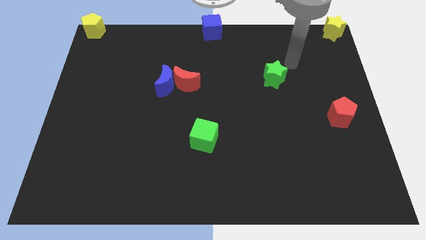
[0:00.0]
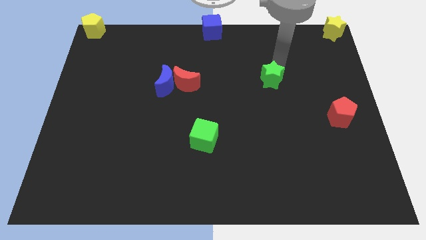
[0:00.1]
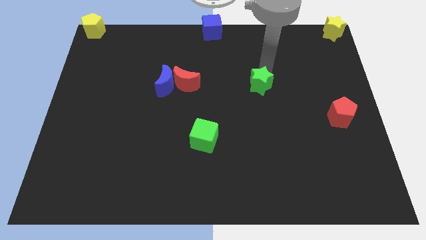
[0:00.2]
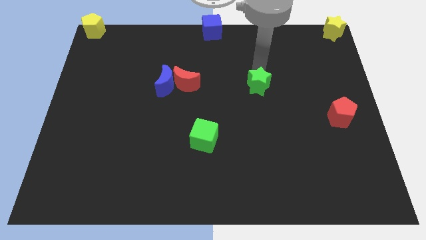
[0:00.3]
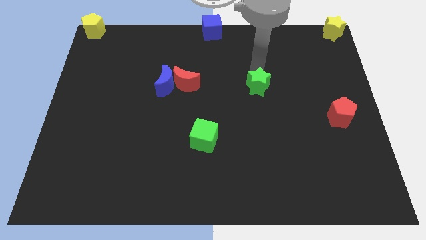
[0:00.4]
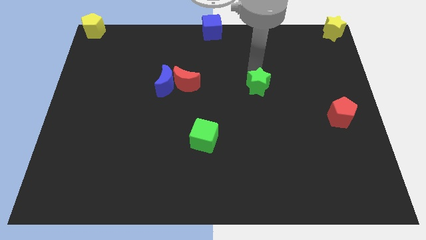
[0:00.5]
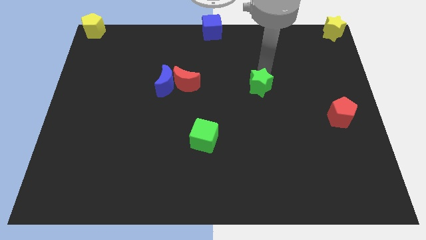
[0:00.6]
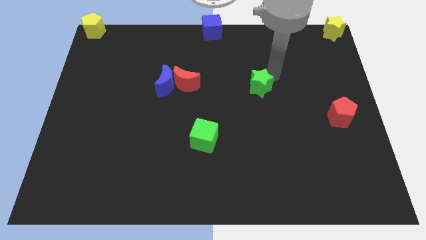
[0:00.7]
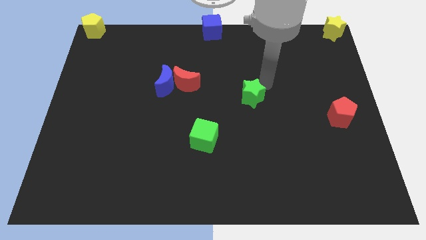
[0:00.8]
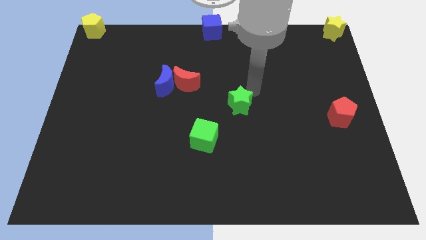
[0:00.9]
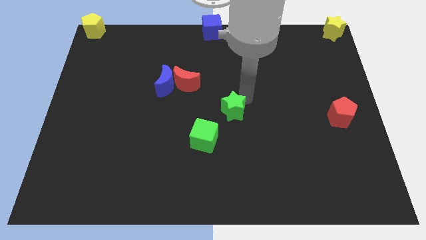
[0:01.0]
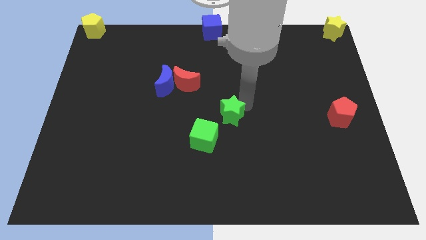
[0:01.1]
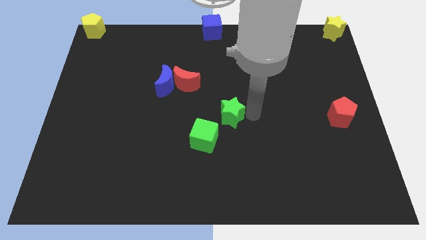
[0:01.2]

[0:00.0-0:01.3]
slide the green star diagonally bottom right to the red moon

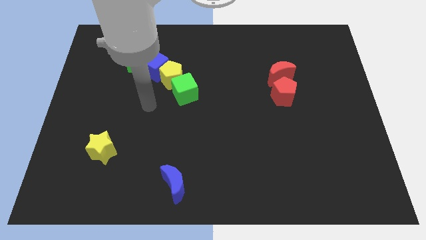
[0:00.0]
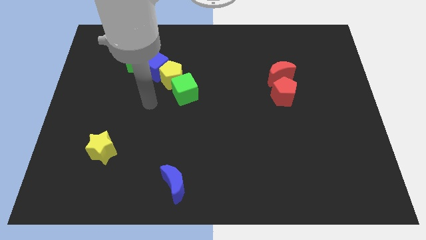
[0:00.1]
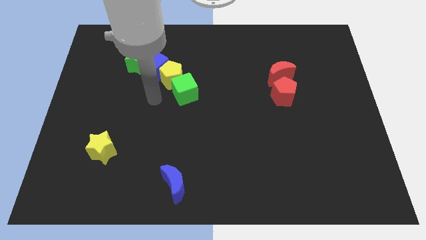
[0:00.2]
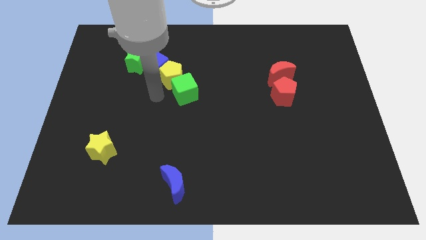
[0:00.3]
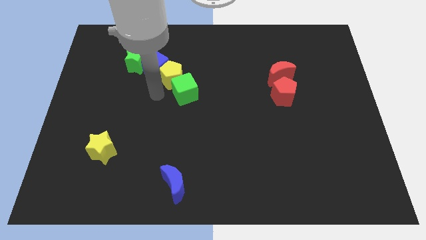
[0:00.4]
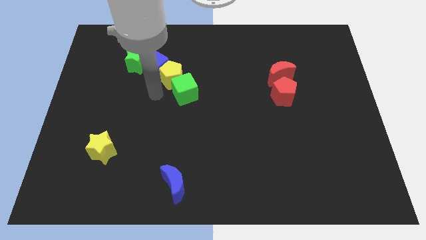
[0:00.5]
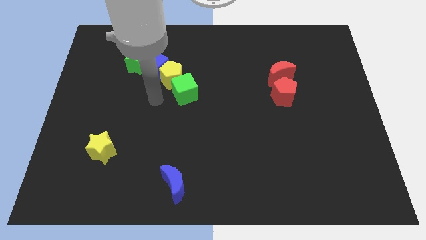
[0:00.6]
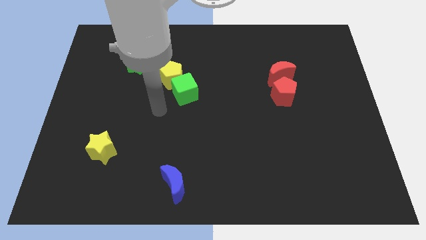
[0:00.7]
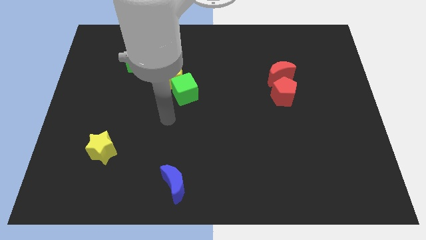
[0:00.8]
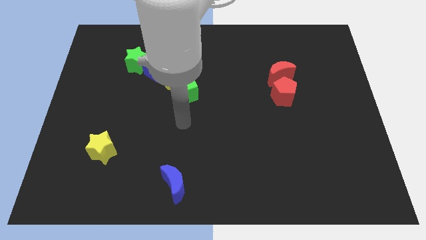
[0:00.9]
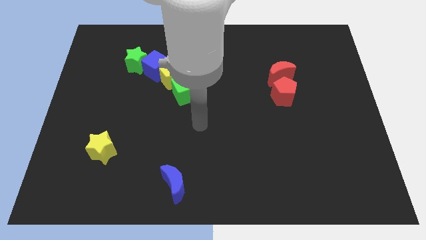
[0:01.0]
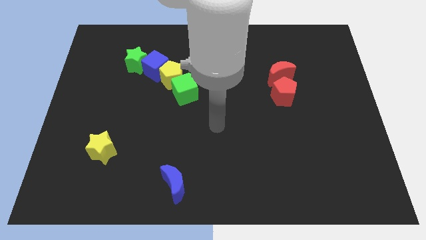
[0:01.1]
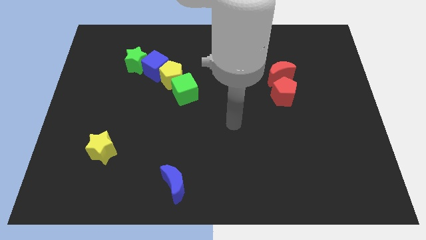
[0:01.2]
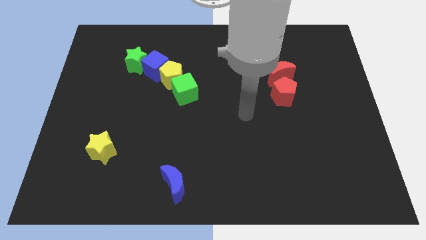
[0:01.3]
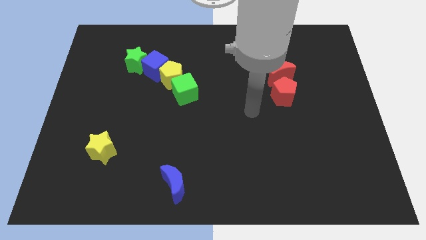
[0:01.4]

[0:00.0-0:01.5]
place your arm to the bottom left side of the red pentagon

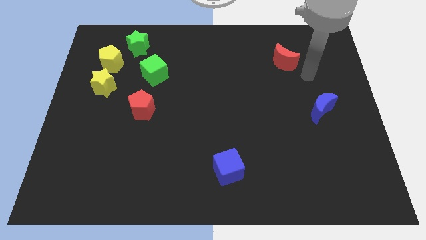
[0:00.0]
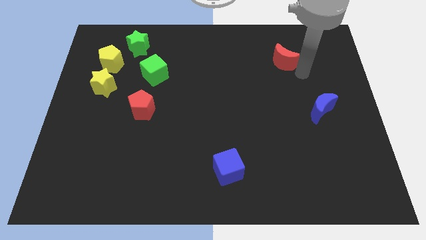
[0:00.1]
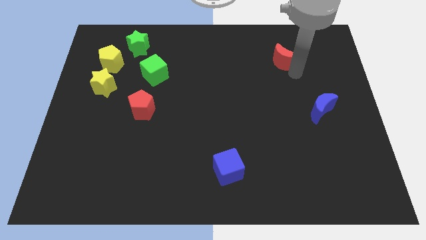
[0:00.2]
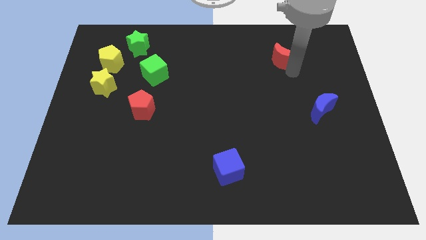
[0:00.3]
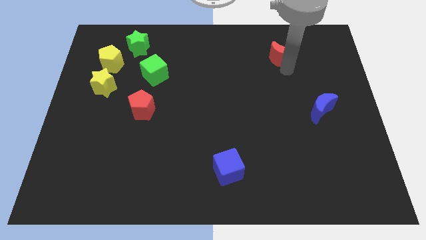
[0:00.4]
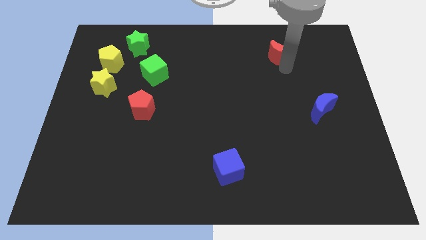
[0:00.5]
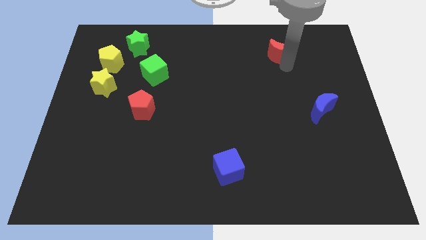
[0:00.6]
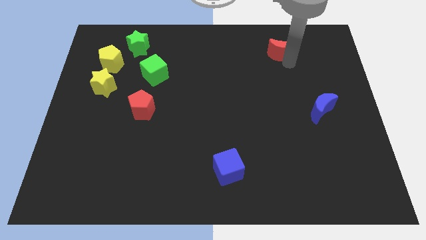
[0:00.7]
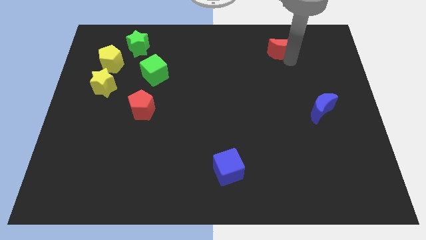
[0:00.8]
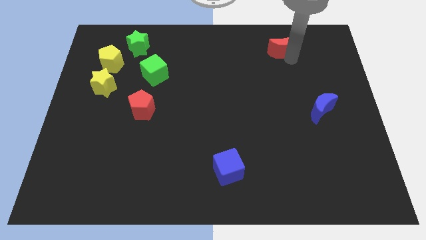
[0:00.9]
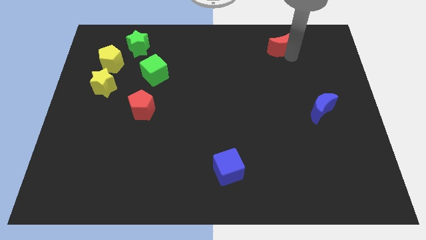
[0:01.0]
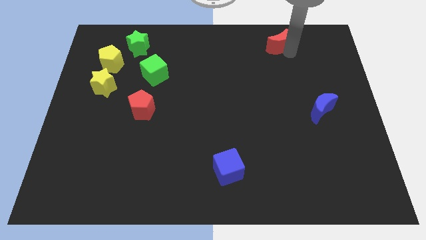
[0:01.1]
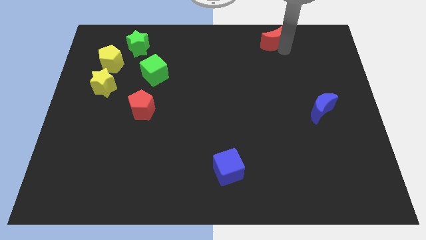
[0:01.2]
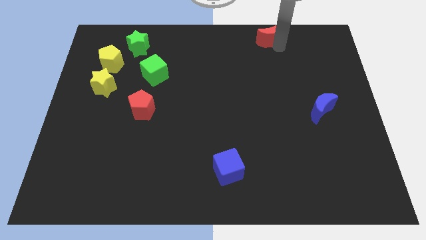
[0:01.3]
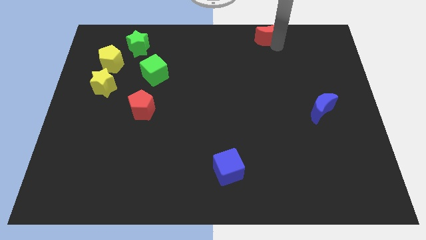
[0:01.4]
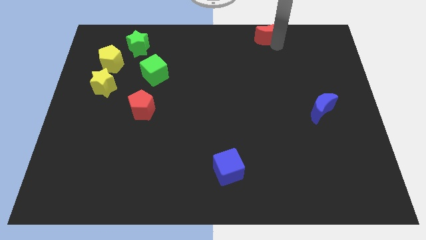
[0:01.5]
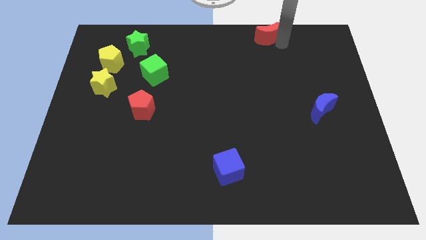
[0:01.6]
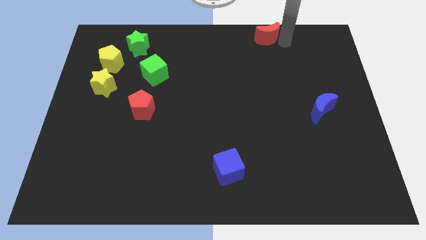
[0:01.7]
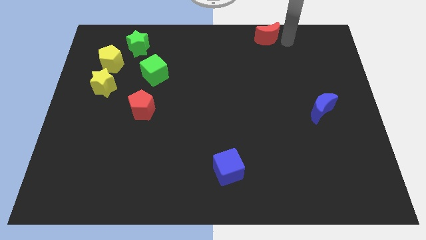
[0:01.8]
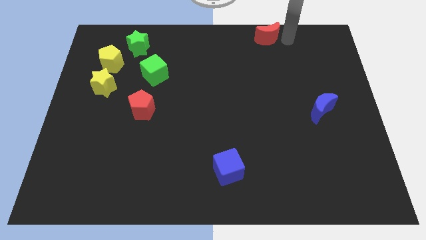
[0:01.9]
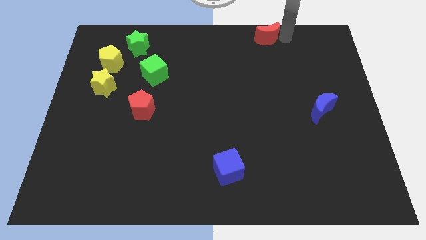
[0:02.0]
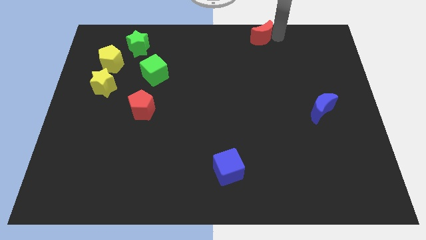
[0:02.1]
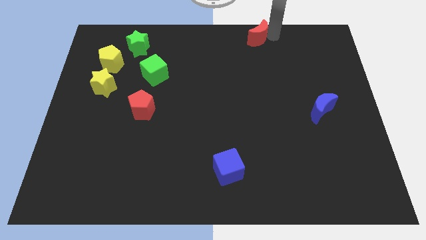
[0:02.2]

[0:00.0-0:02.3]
reposition the red crescent

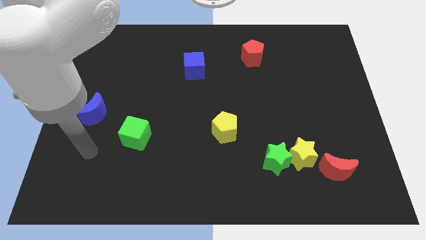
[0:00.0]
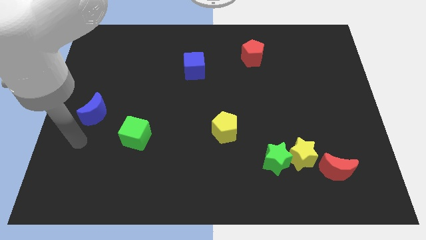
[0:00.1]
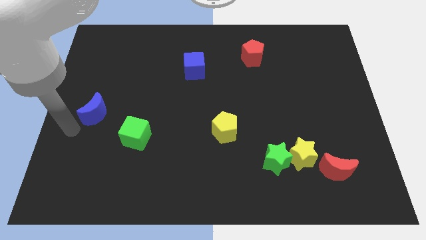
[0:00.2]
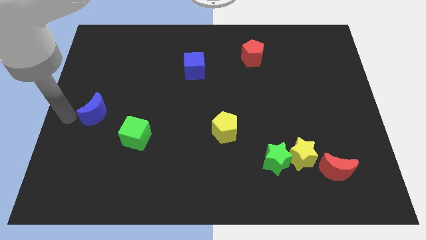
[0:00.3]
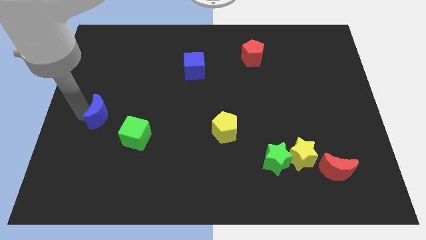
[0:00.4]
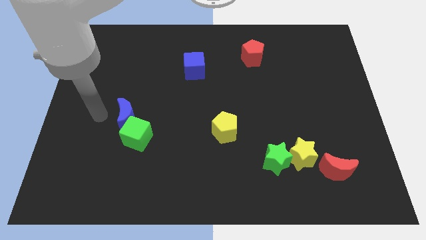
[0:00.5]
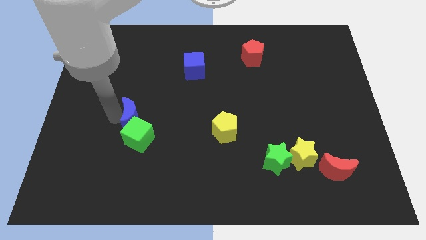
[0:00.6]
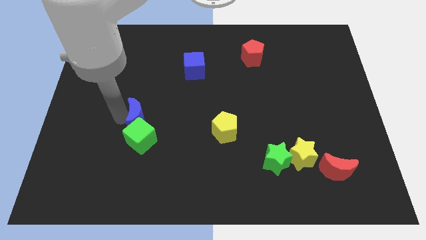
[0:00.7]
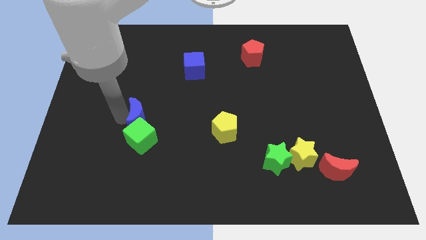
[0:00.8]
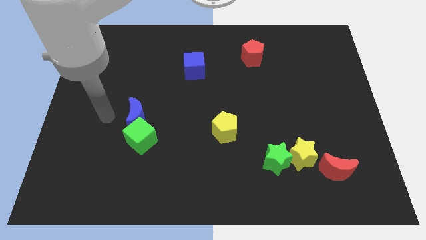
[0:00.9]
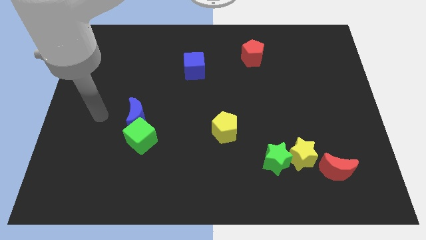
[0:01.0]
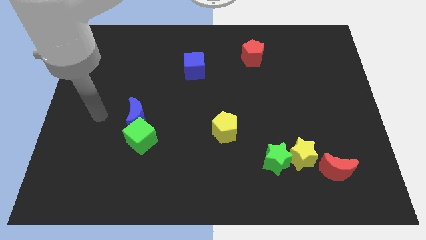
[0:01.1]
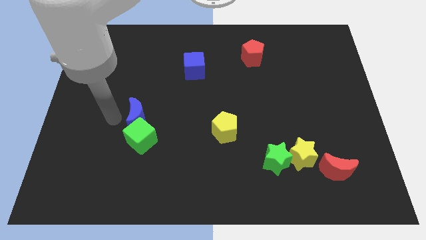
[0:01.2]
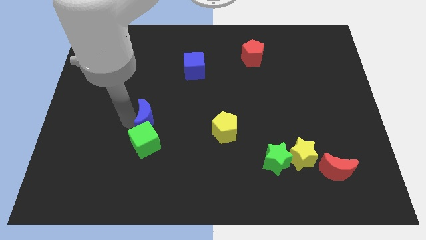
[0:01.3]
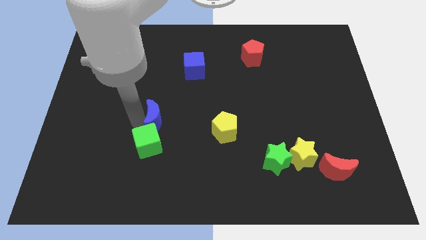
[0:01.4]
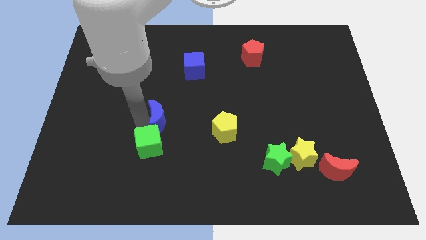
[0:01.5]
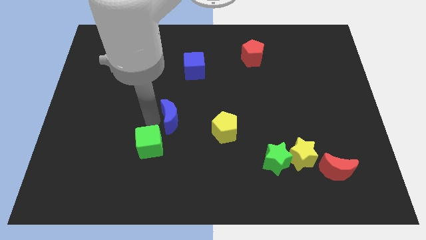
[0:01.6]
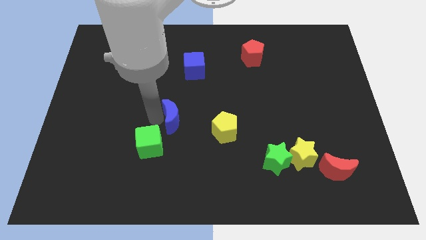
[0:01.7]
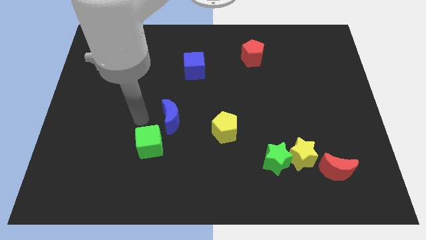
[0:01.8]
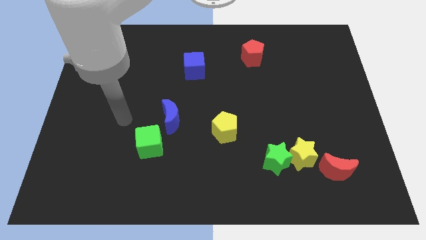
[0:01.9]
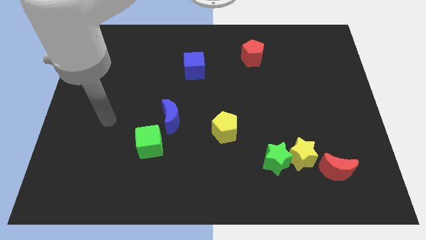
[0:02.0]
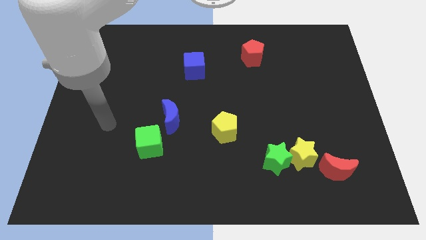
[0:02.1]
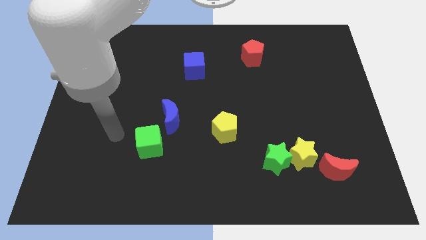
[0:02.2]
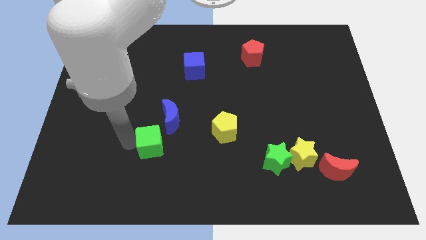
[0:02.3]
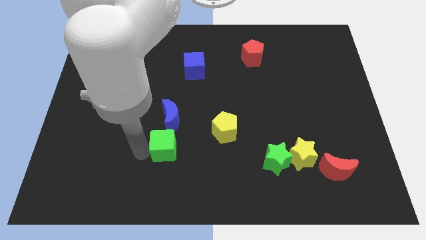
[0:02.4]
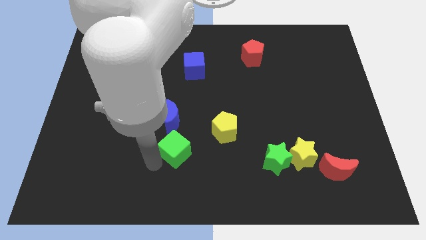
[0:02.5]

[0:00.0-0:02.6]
place the green cube below blue moon

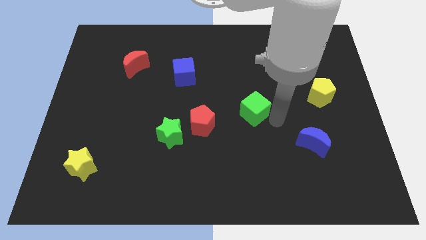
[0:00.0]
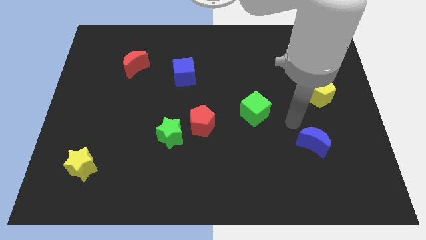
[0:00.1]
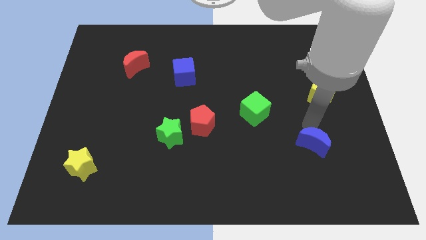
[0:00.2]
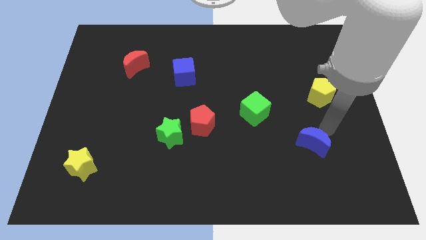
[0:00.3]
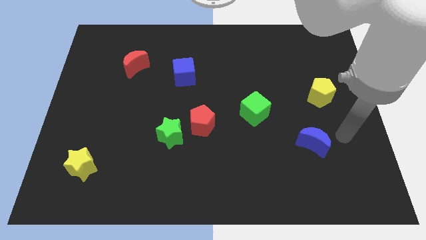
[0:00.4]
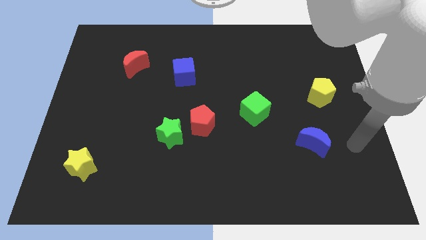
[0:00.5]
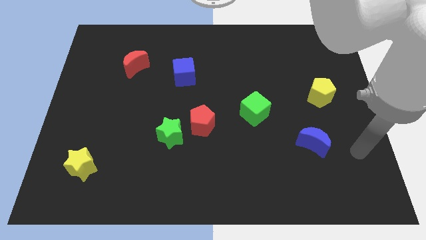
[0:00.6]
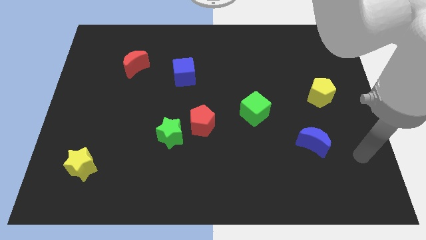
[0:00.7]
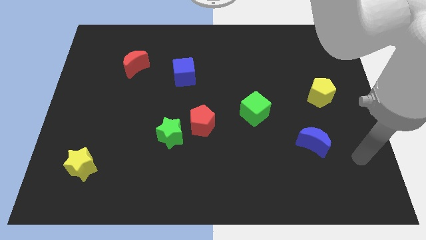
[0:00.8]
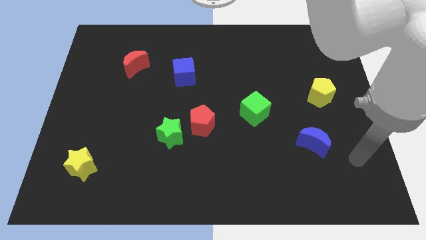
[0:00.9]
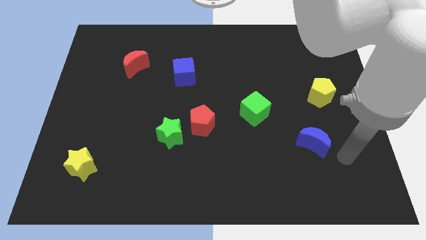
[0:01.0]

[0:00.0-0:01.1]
move the arm away from the green cube

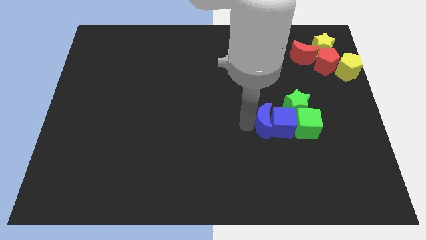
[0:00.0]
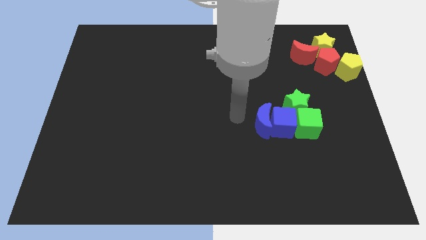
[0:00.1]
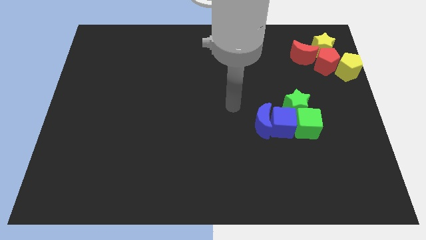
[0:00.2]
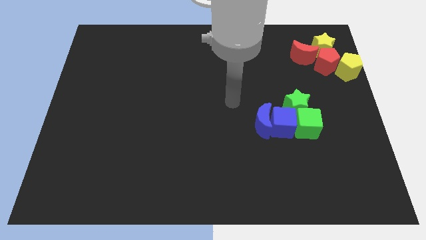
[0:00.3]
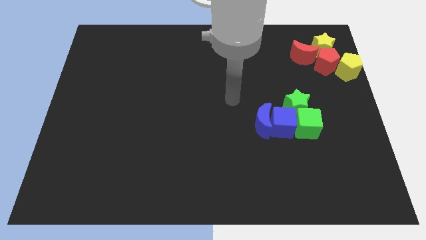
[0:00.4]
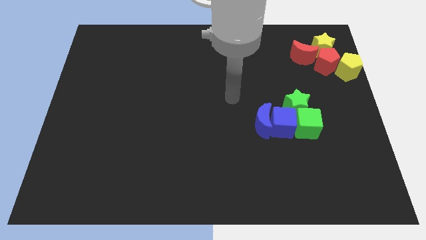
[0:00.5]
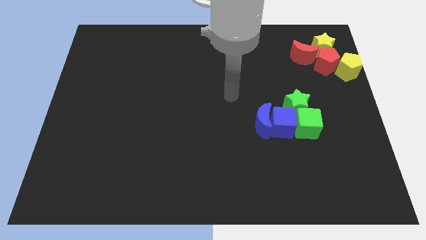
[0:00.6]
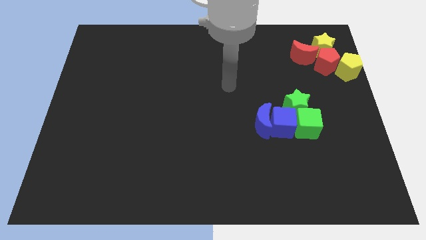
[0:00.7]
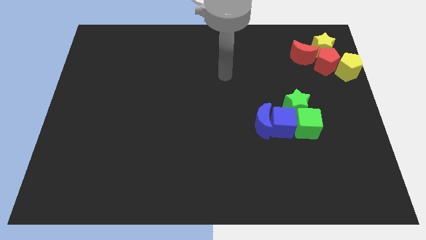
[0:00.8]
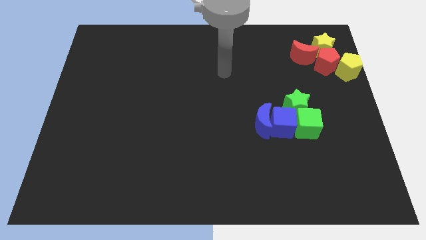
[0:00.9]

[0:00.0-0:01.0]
move your arm towards the top of the board
